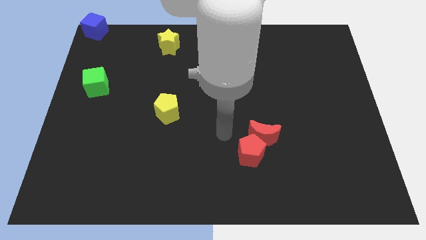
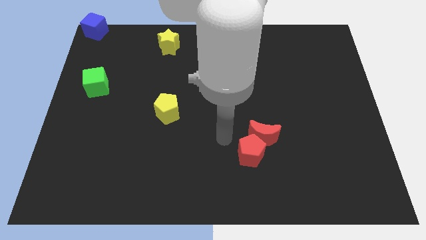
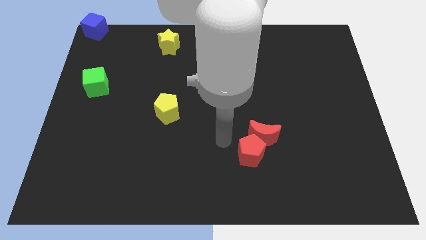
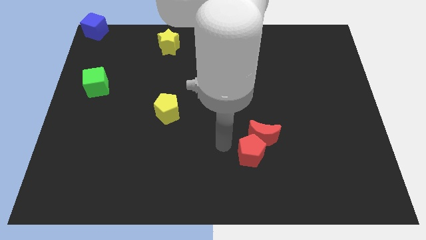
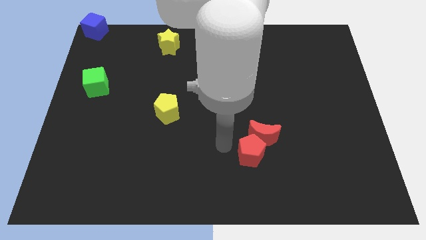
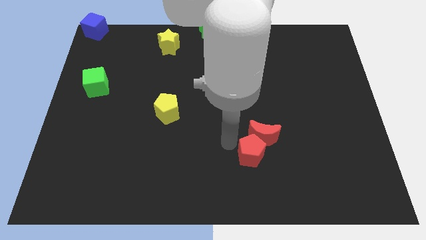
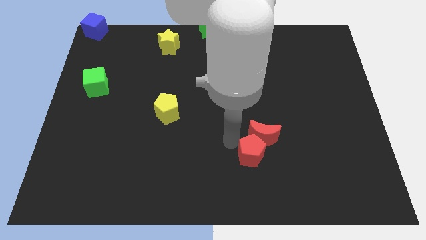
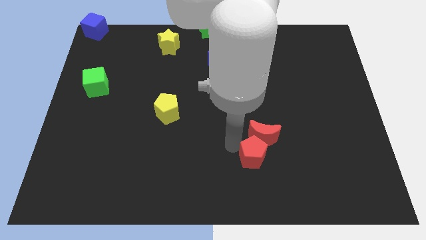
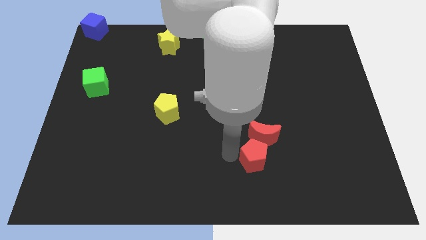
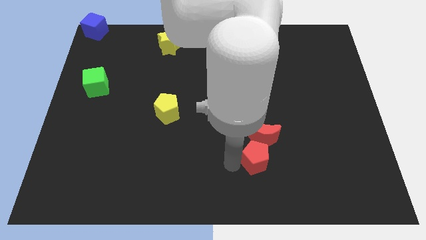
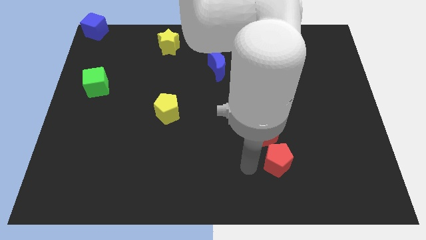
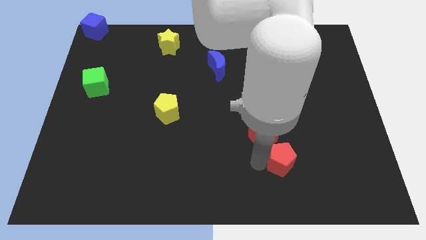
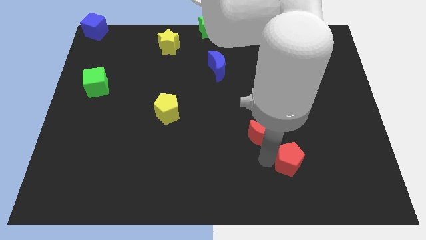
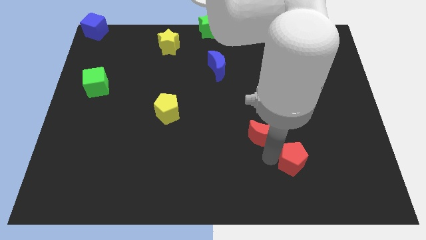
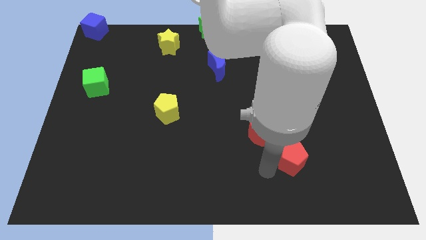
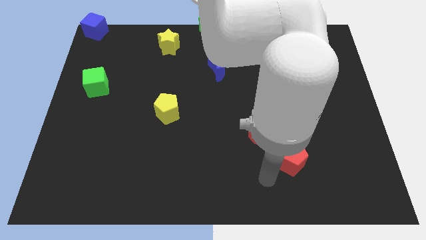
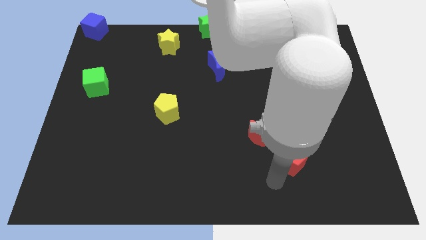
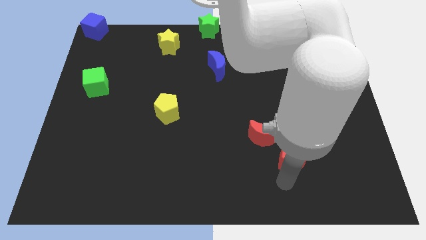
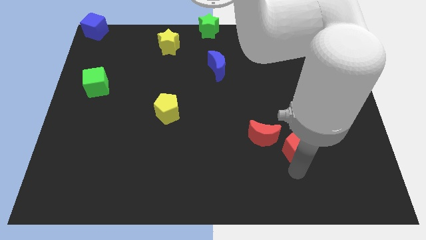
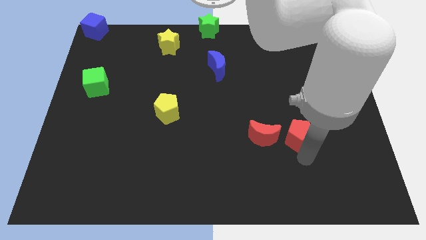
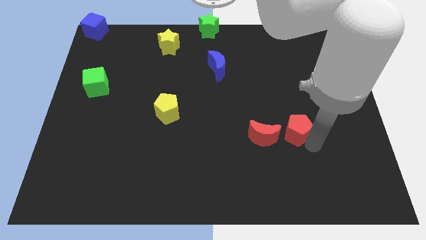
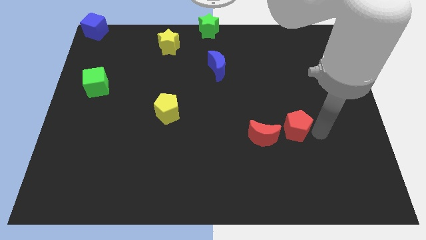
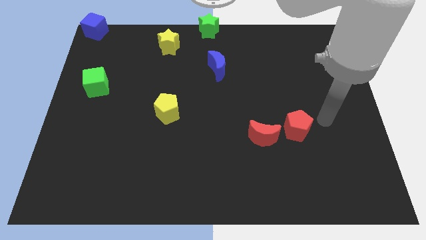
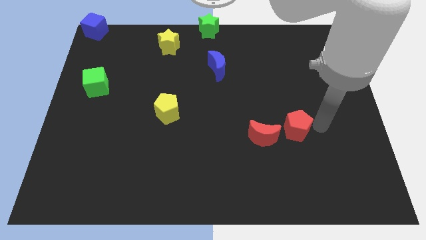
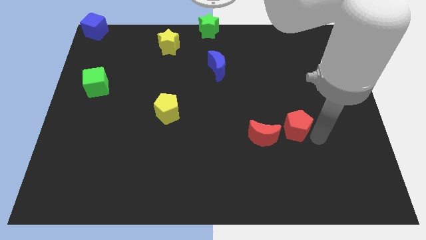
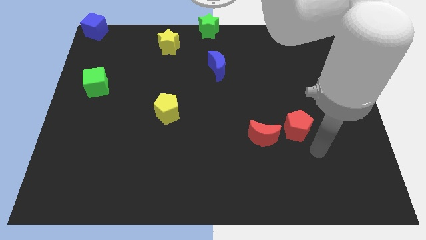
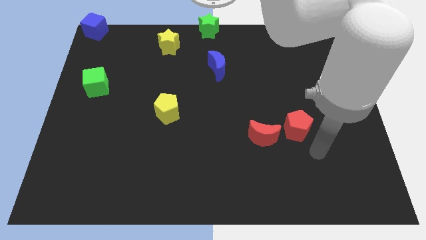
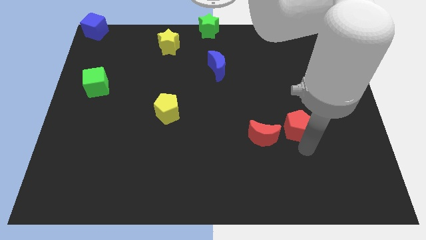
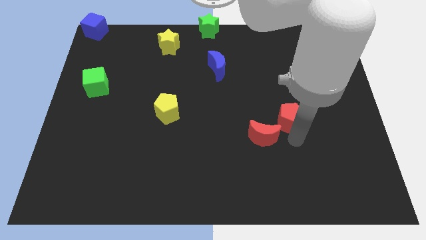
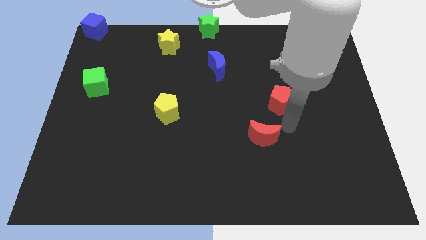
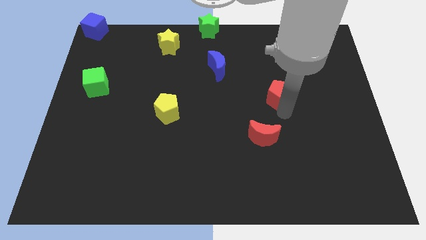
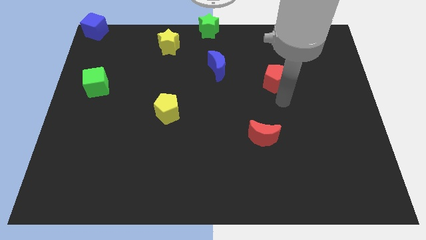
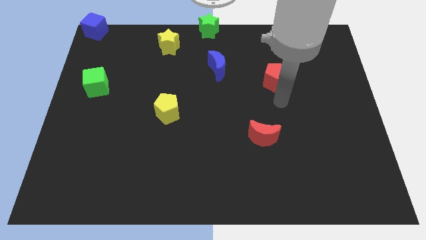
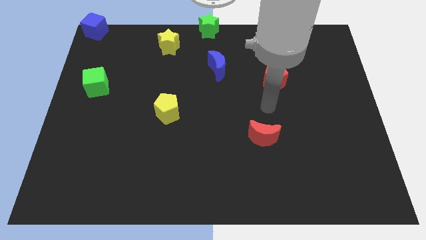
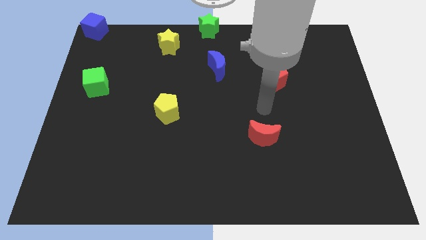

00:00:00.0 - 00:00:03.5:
separate the red pentagon from red moon

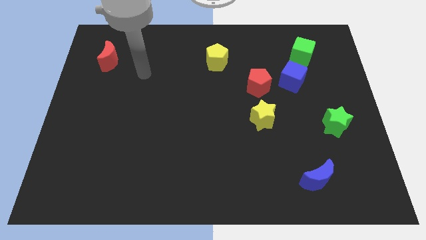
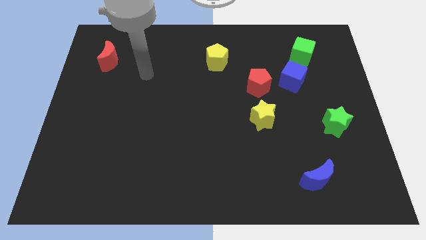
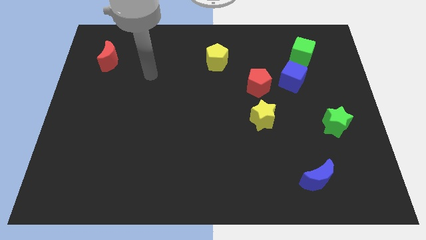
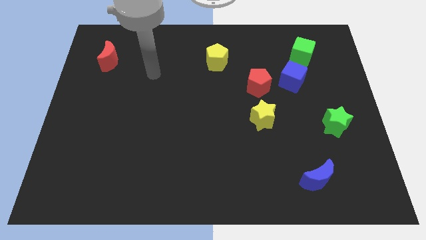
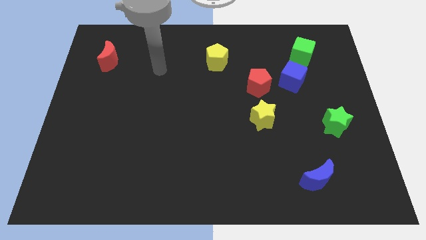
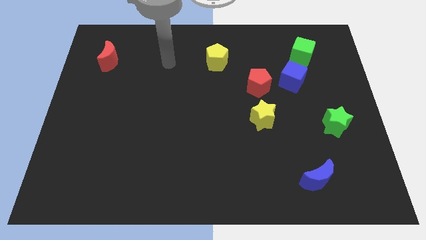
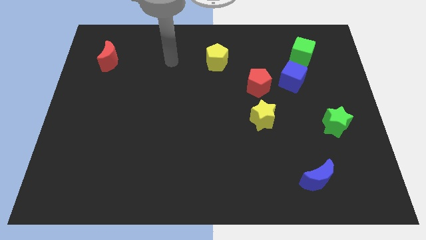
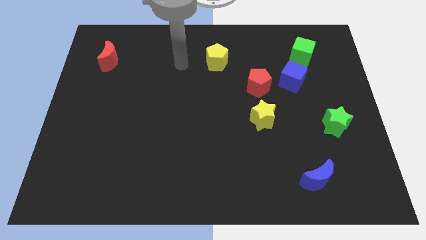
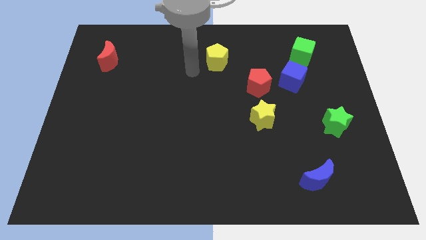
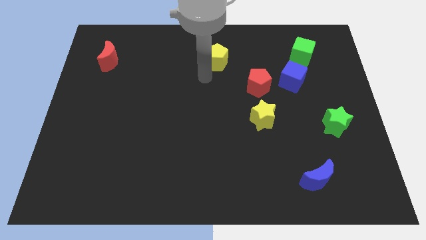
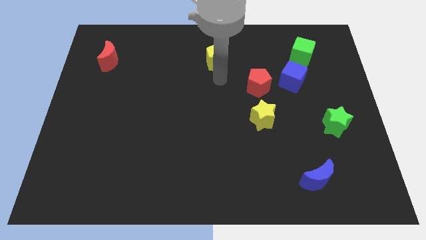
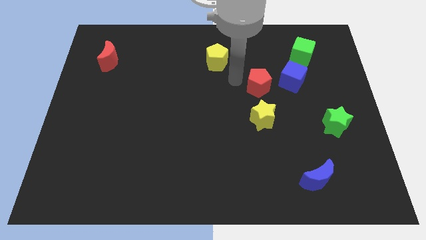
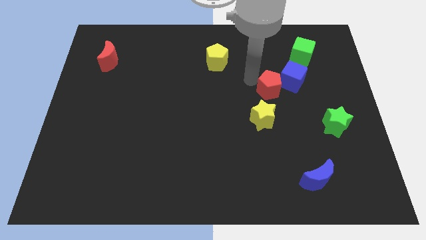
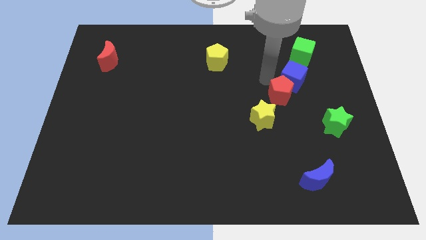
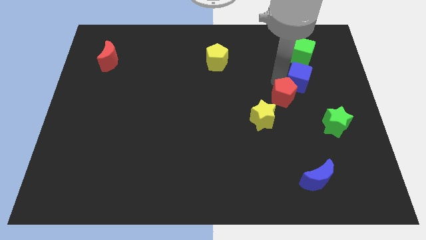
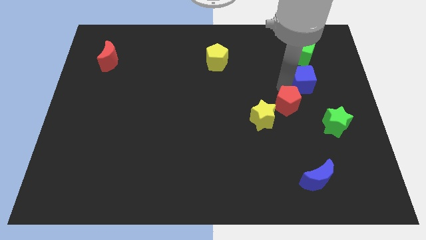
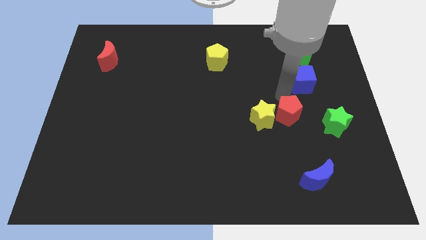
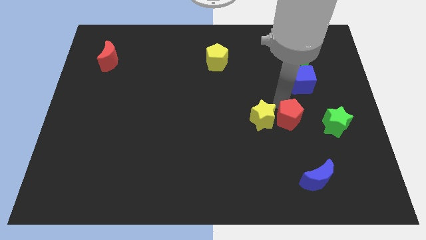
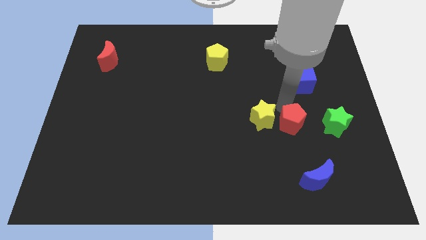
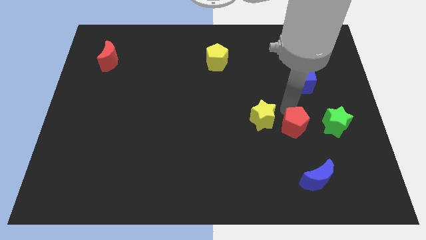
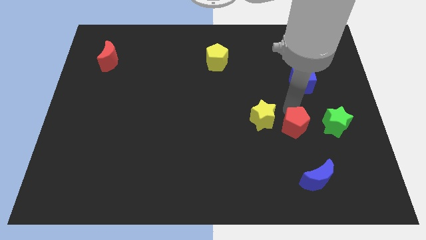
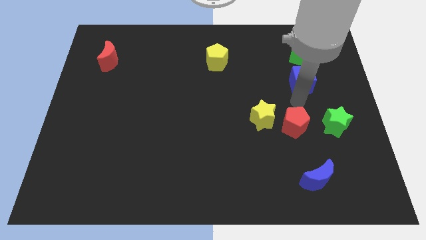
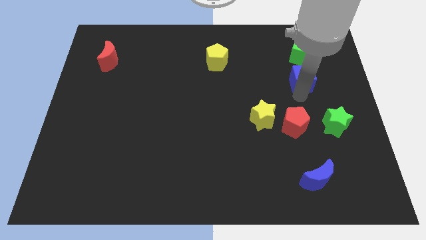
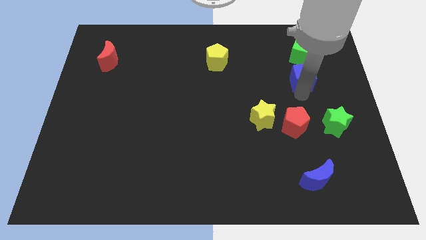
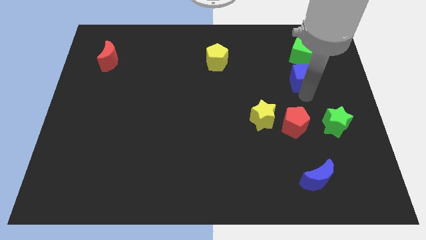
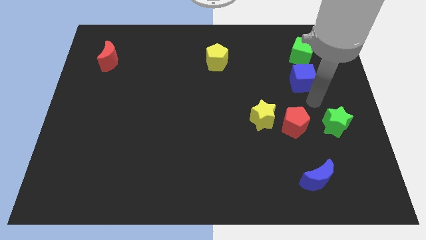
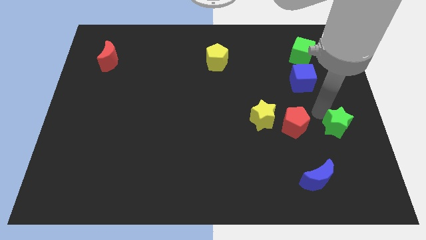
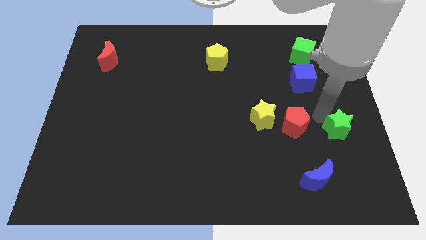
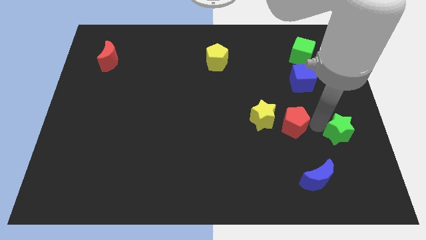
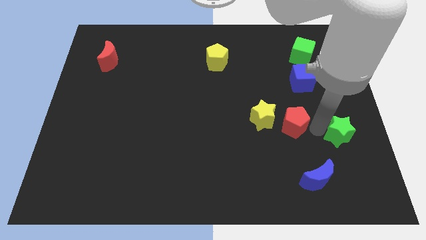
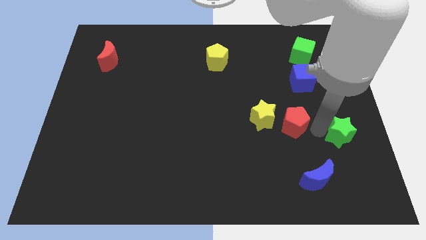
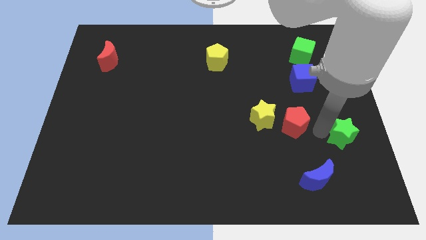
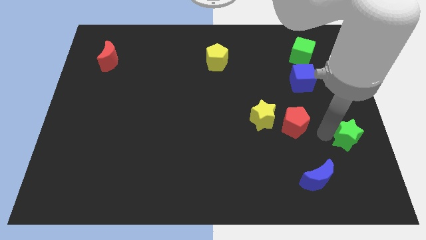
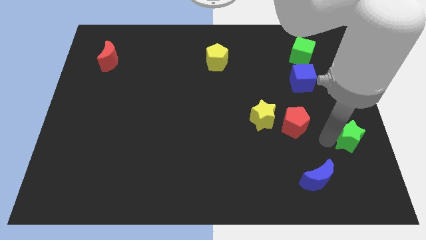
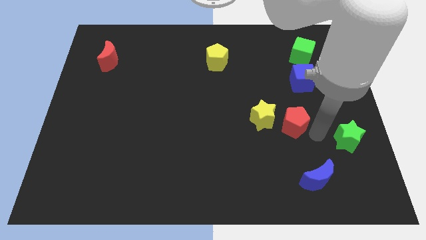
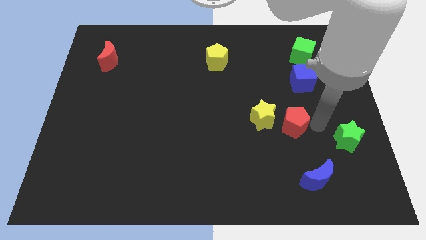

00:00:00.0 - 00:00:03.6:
place red pentagon and green star in a diagonal line

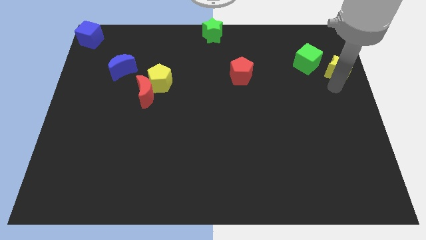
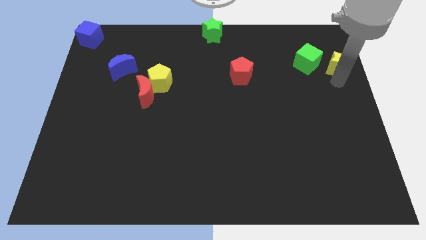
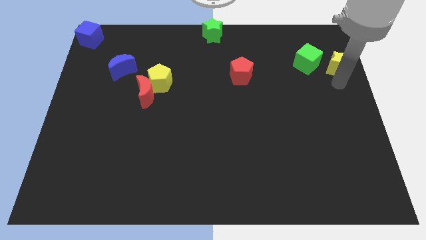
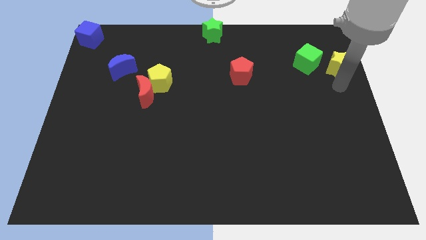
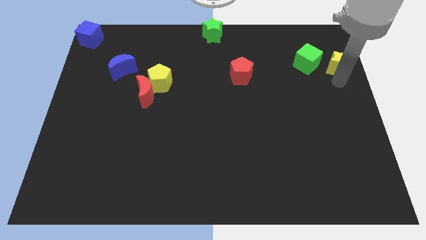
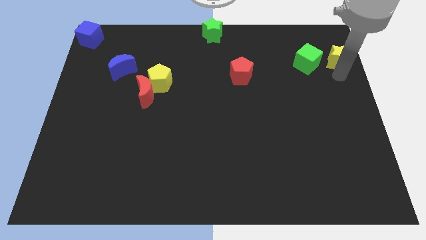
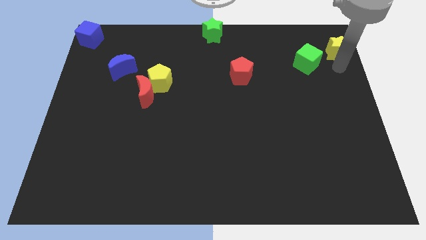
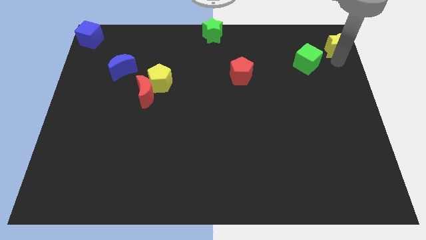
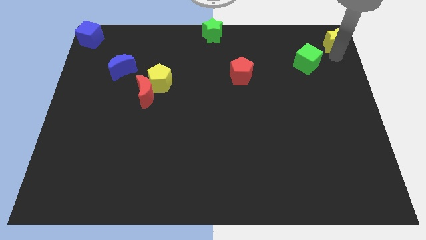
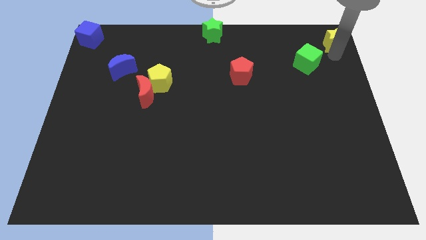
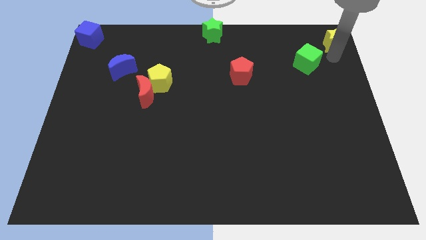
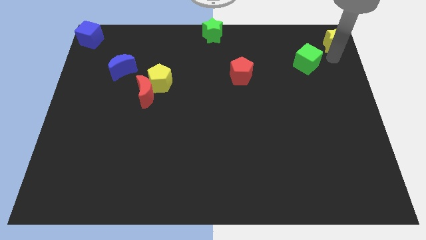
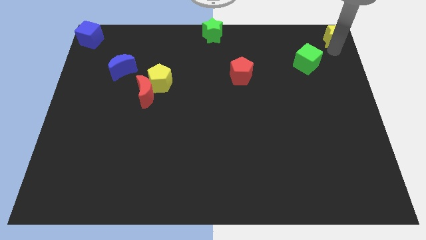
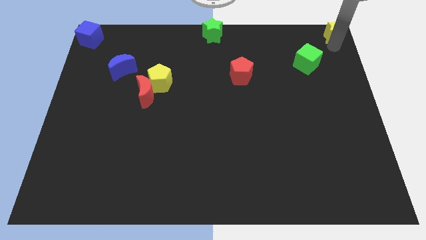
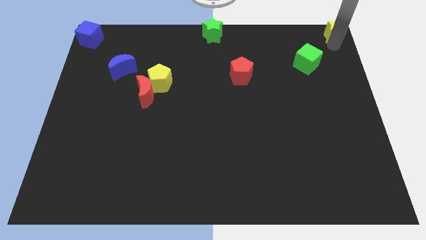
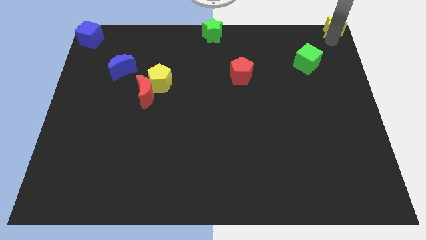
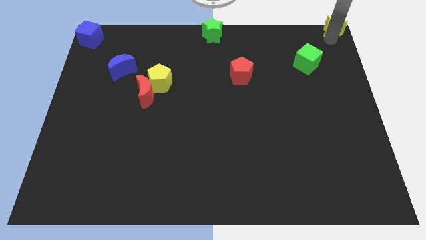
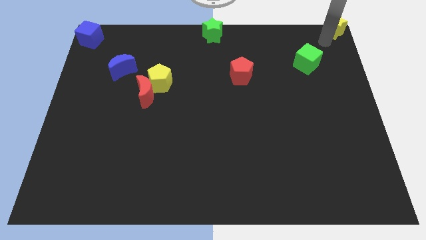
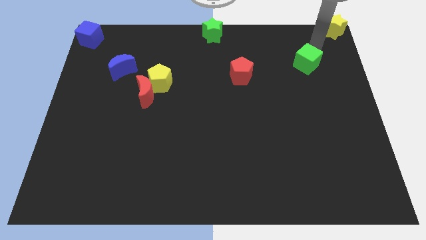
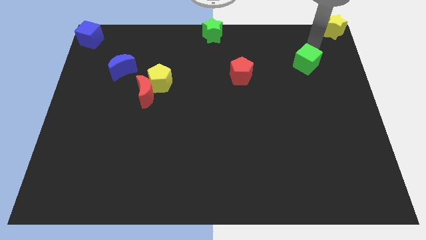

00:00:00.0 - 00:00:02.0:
slide the yellow star at the top right corner
